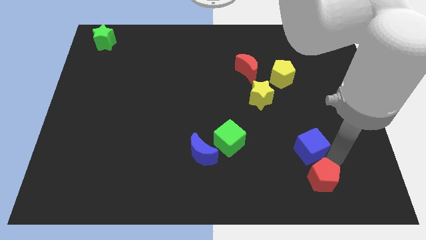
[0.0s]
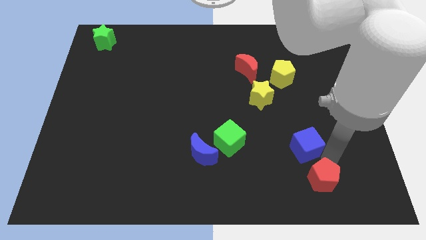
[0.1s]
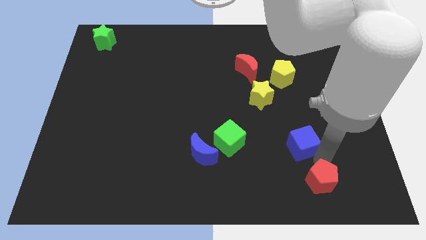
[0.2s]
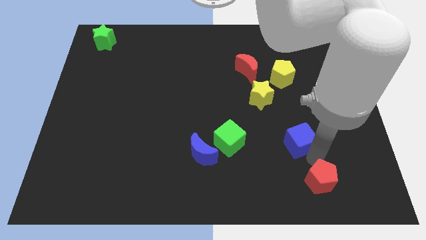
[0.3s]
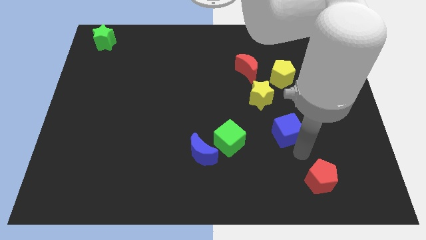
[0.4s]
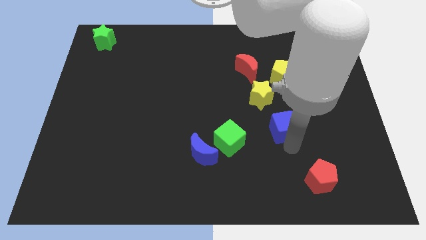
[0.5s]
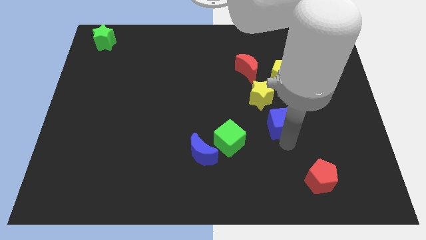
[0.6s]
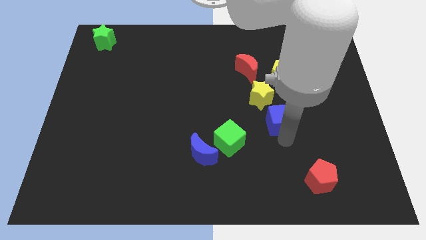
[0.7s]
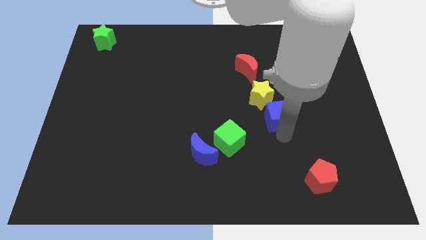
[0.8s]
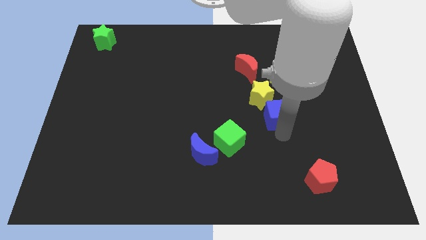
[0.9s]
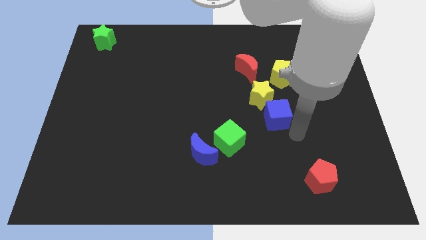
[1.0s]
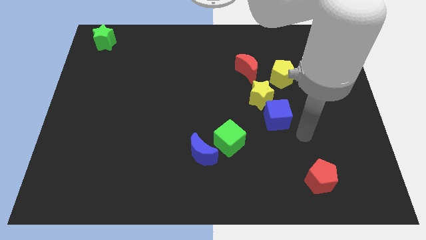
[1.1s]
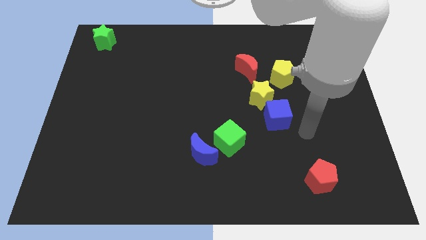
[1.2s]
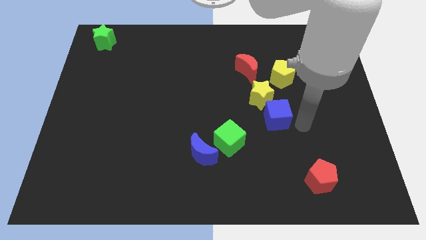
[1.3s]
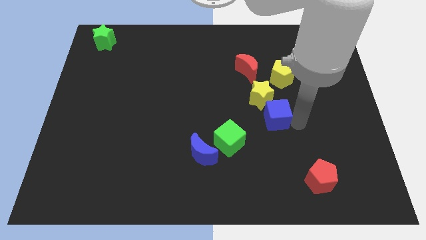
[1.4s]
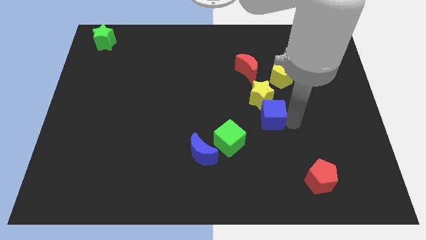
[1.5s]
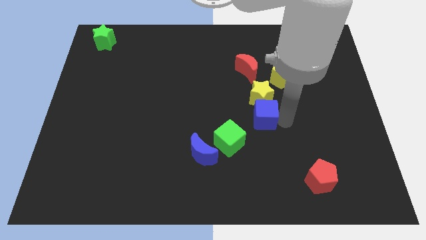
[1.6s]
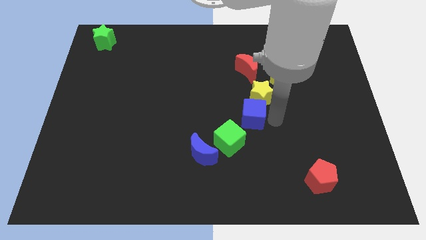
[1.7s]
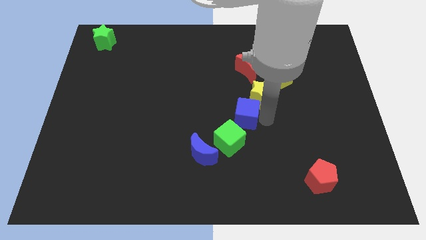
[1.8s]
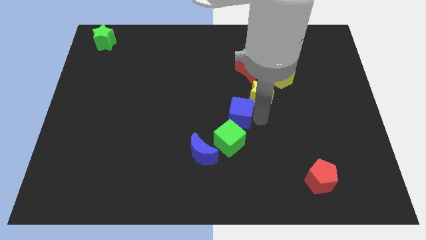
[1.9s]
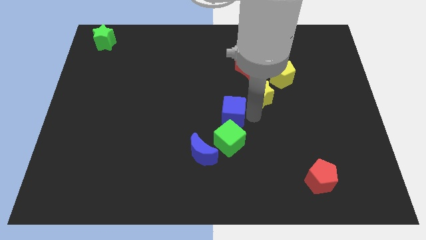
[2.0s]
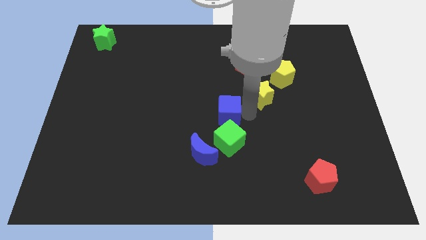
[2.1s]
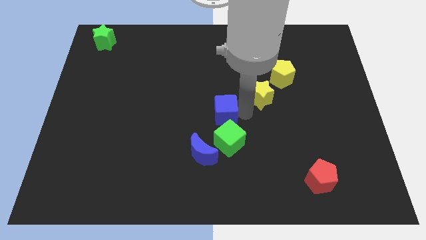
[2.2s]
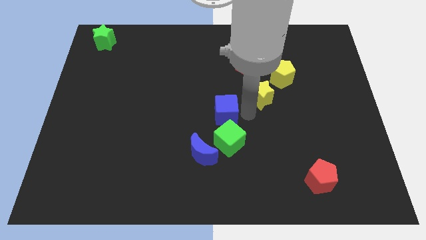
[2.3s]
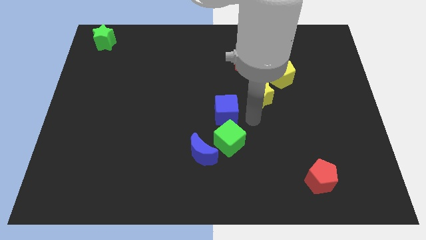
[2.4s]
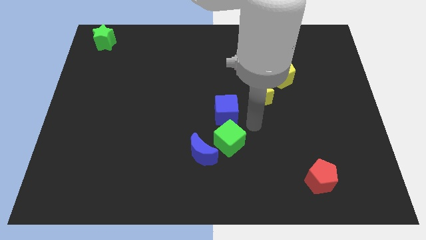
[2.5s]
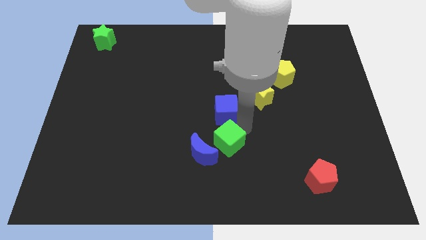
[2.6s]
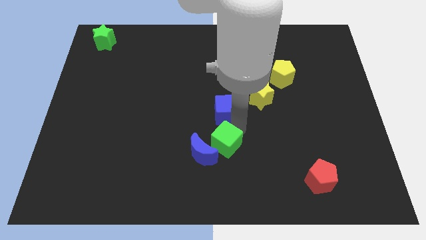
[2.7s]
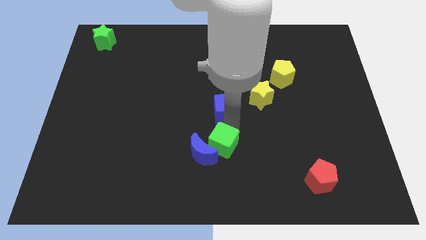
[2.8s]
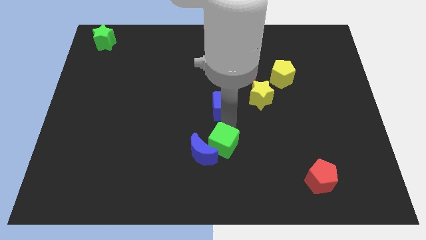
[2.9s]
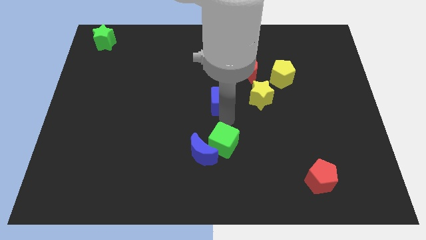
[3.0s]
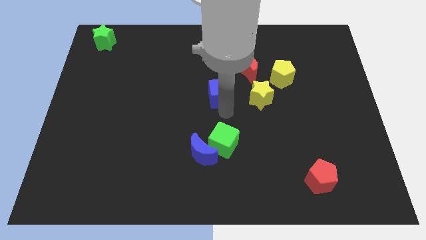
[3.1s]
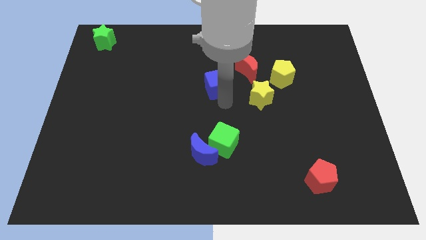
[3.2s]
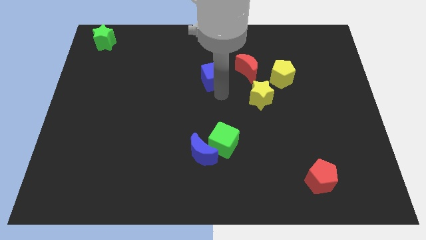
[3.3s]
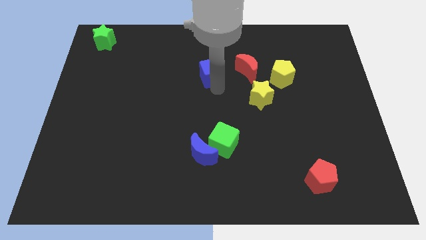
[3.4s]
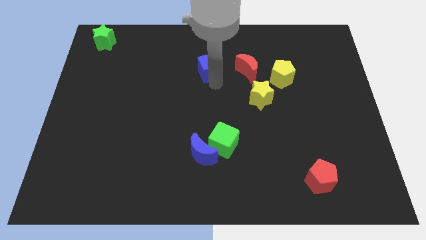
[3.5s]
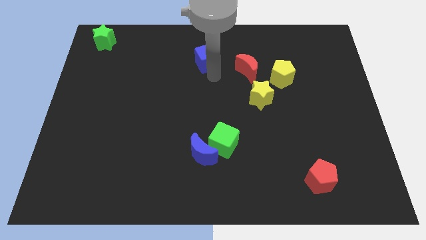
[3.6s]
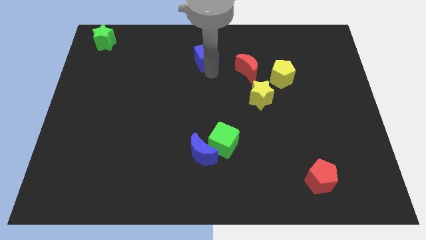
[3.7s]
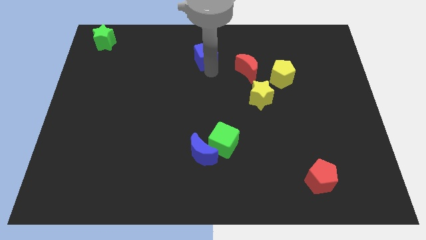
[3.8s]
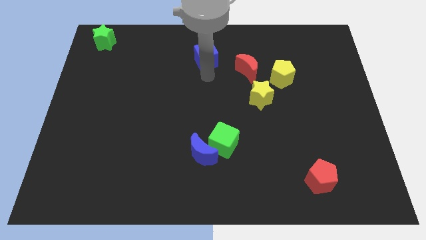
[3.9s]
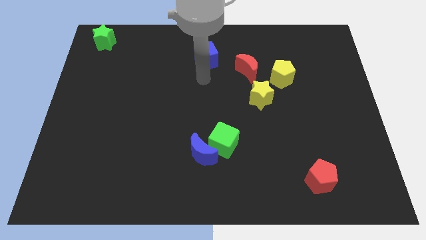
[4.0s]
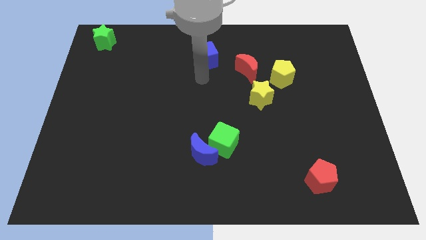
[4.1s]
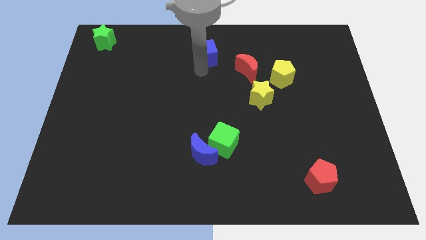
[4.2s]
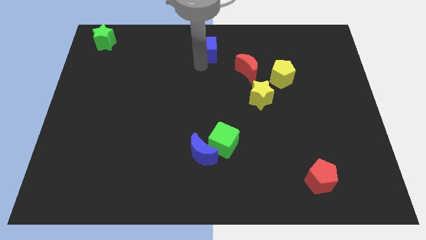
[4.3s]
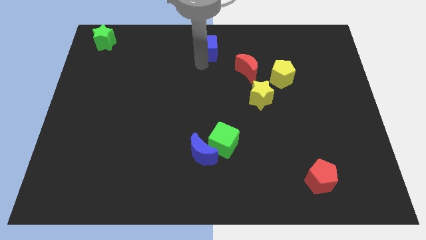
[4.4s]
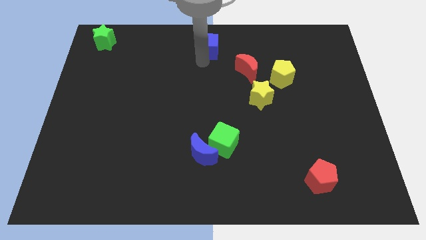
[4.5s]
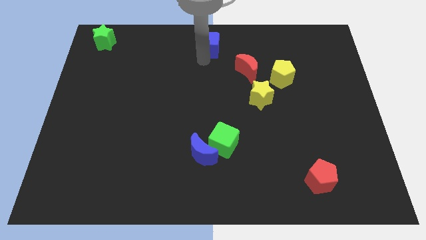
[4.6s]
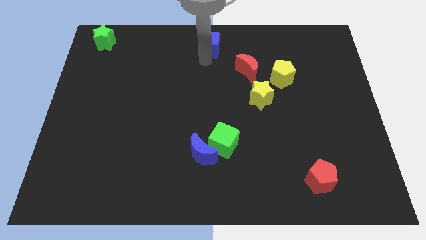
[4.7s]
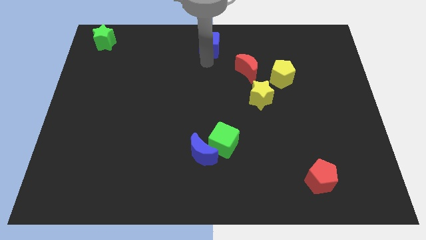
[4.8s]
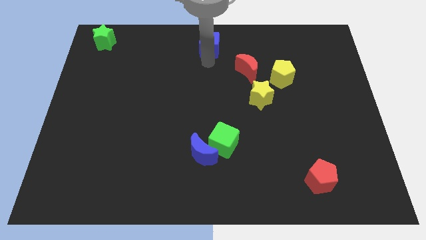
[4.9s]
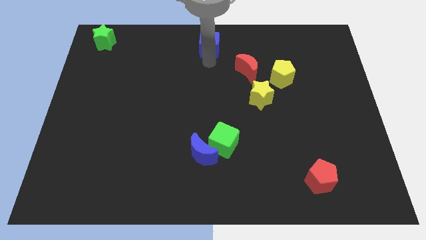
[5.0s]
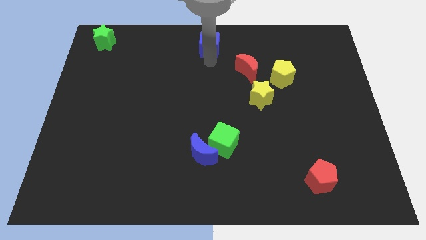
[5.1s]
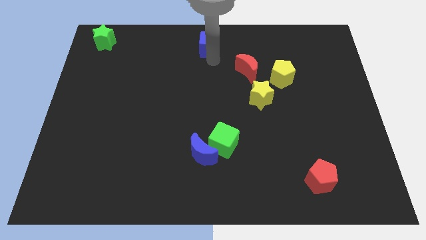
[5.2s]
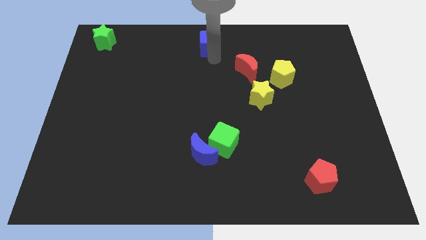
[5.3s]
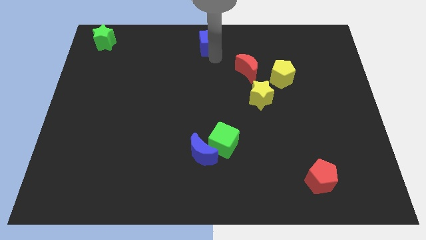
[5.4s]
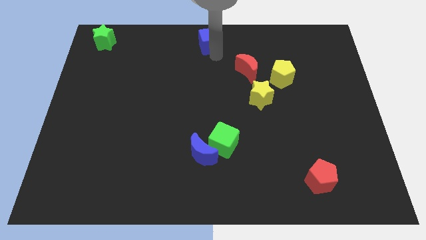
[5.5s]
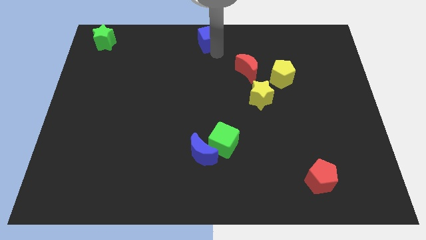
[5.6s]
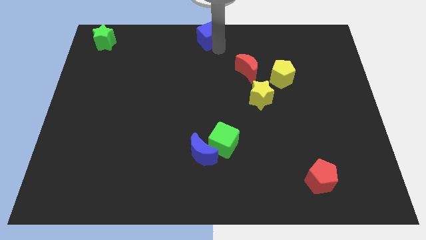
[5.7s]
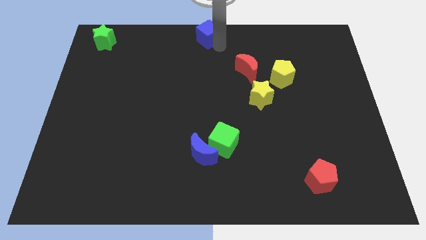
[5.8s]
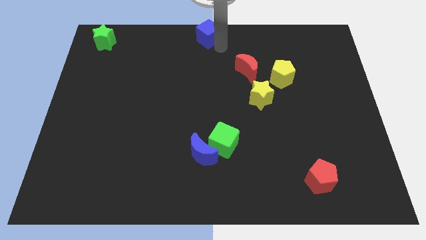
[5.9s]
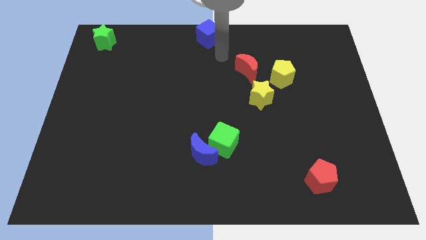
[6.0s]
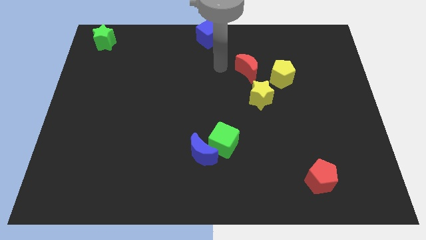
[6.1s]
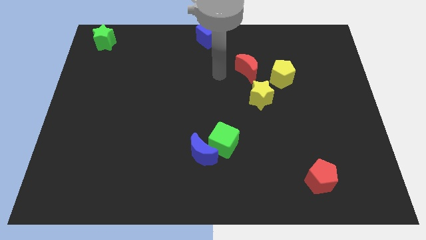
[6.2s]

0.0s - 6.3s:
put the blue cube to the right of the green star

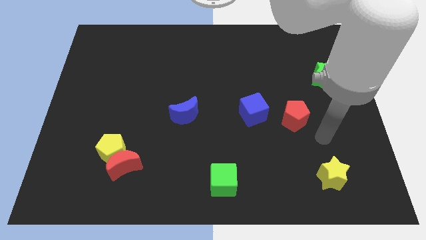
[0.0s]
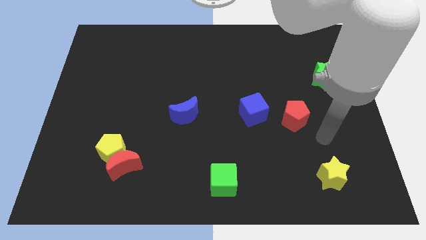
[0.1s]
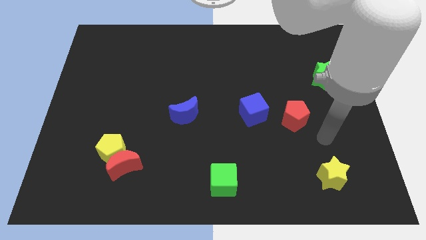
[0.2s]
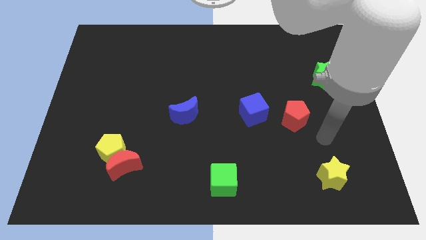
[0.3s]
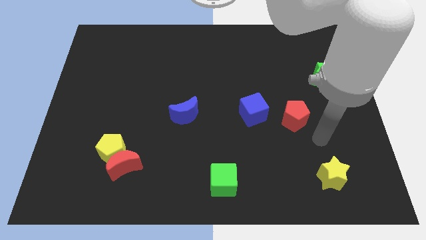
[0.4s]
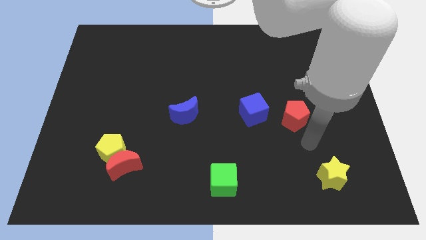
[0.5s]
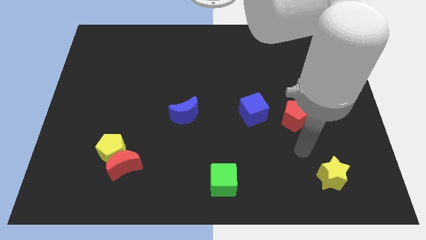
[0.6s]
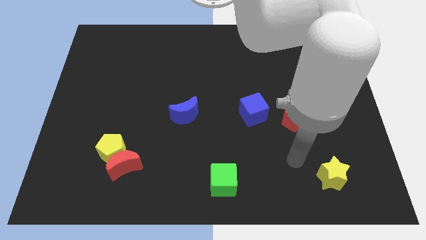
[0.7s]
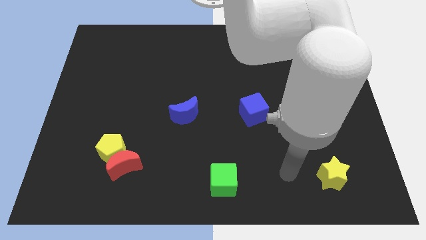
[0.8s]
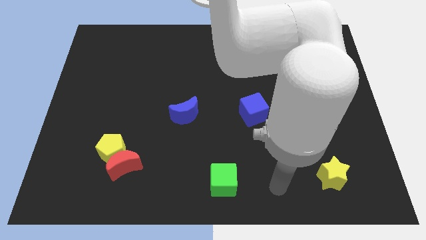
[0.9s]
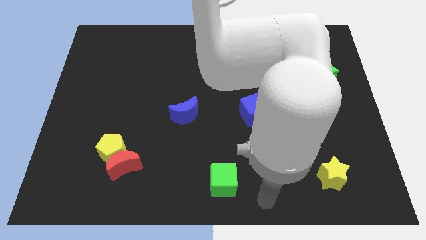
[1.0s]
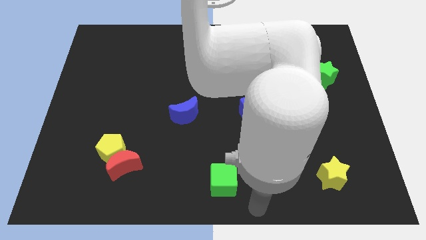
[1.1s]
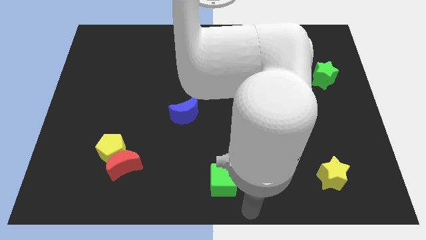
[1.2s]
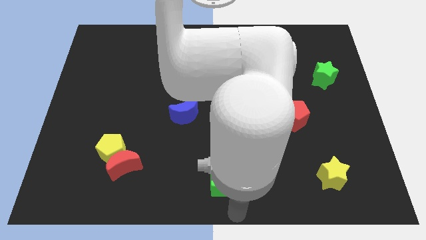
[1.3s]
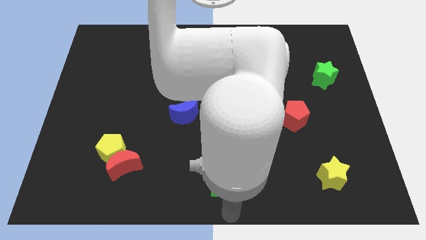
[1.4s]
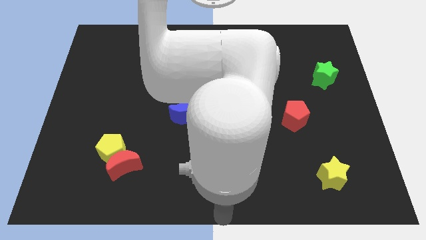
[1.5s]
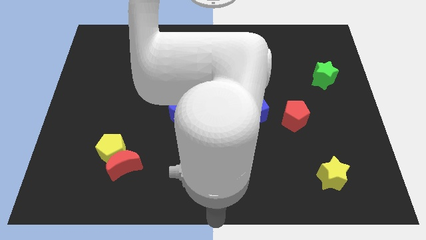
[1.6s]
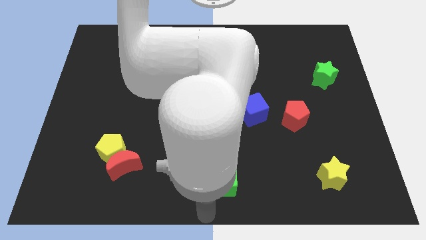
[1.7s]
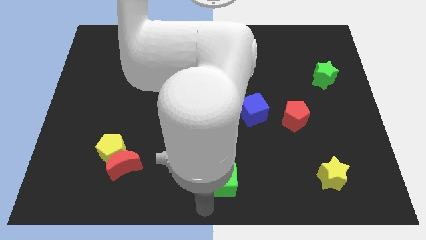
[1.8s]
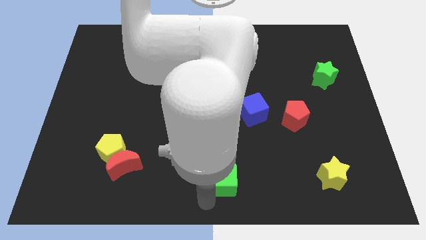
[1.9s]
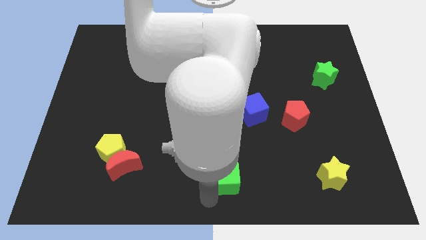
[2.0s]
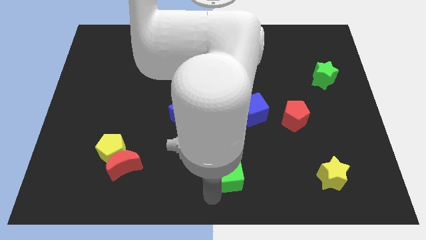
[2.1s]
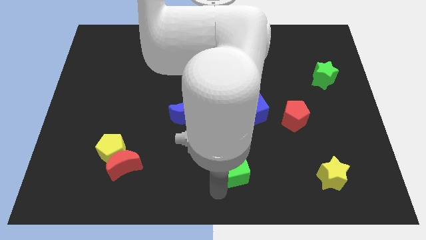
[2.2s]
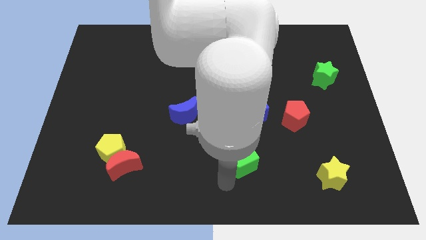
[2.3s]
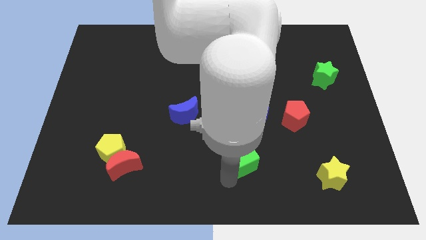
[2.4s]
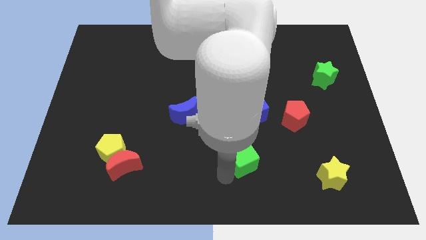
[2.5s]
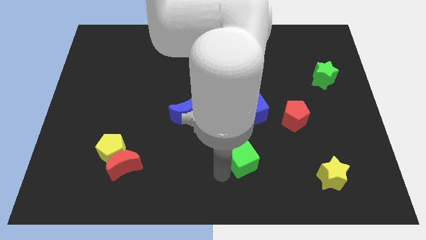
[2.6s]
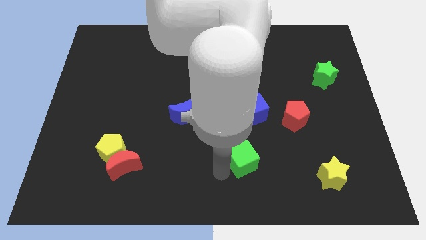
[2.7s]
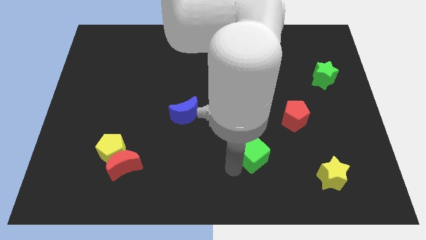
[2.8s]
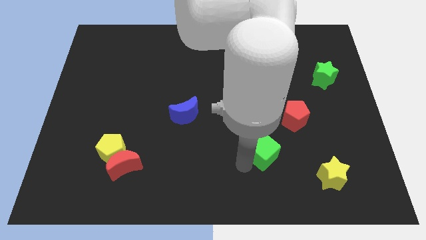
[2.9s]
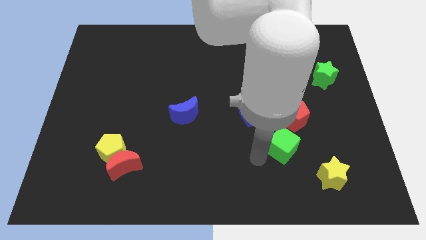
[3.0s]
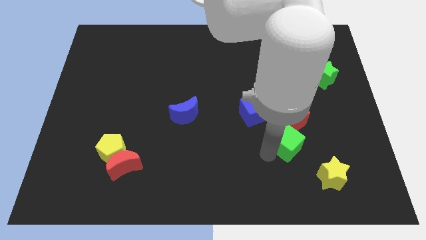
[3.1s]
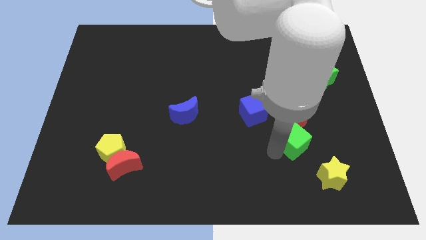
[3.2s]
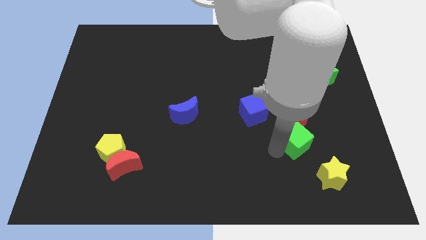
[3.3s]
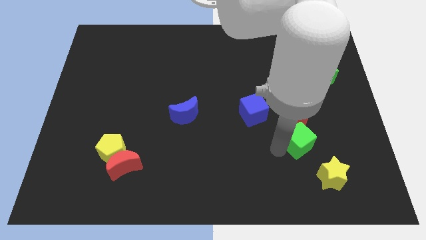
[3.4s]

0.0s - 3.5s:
put the green cube below to the red pentagon
